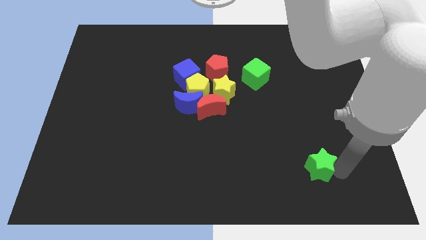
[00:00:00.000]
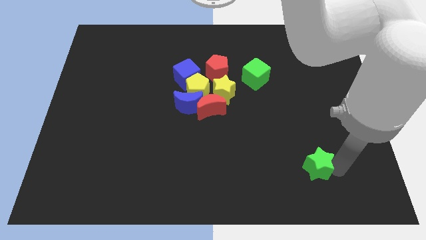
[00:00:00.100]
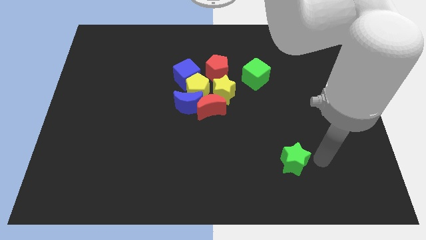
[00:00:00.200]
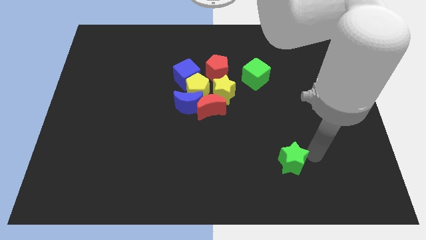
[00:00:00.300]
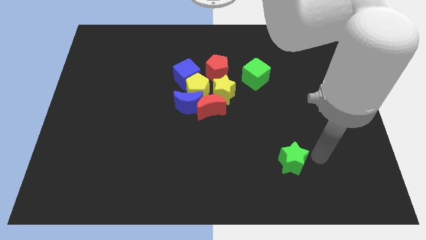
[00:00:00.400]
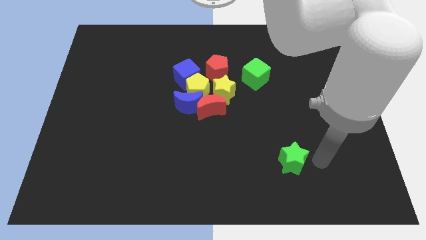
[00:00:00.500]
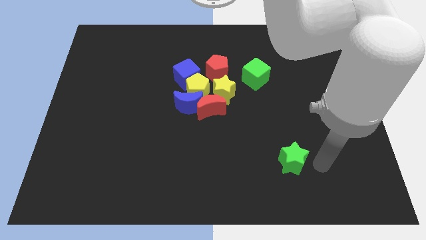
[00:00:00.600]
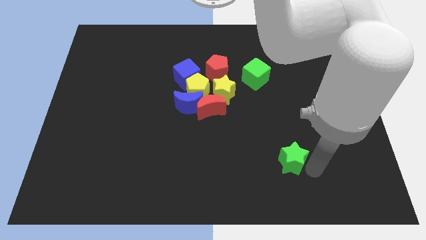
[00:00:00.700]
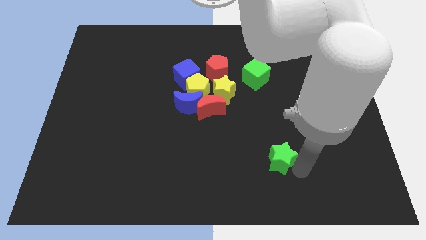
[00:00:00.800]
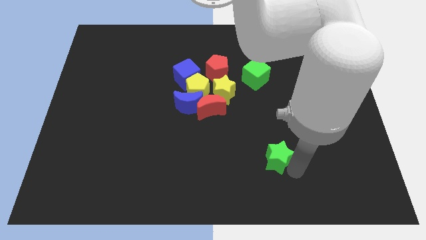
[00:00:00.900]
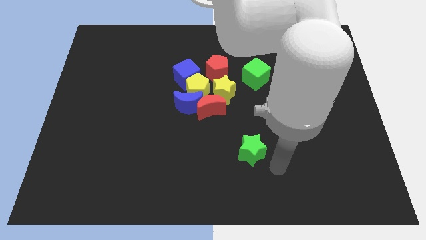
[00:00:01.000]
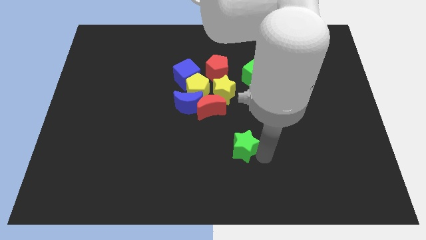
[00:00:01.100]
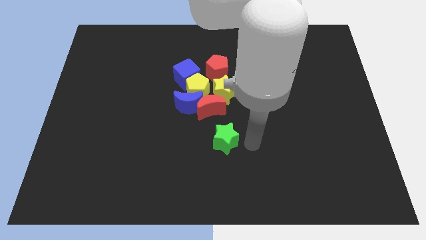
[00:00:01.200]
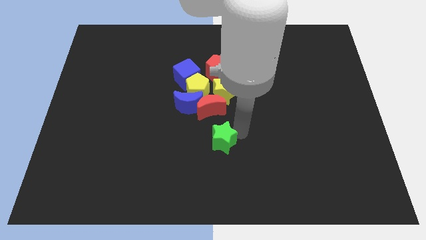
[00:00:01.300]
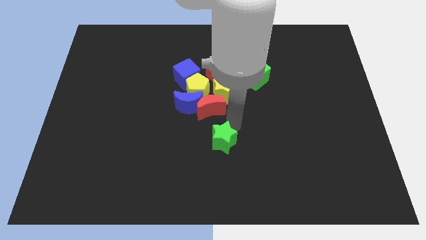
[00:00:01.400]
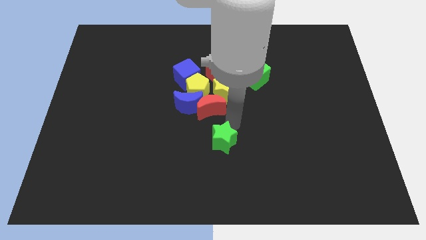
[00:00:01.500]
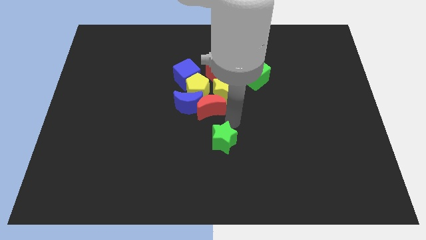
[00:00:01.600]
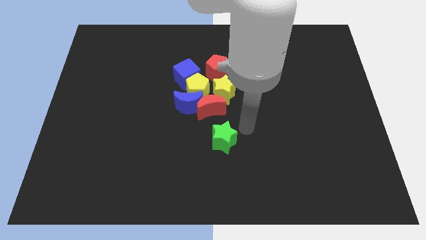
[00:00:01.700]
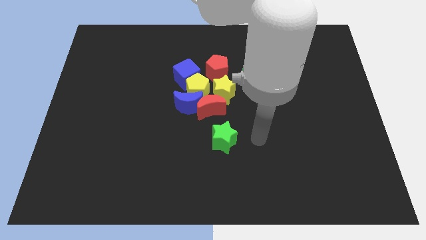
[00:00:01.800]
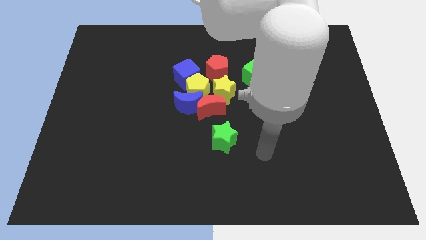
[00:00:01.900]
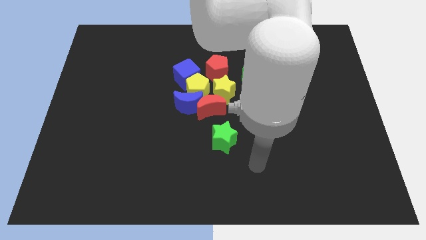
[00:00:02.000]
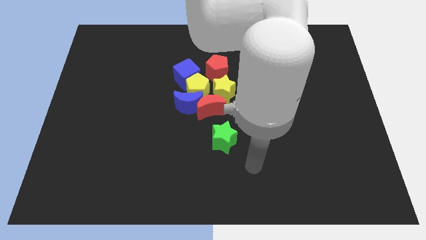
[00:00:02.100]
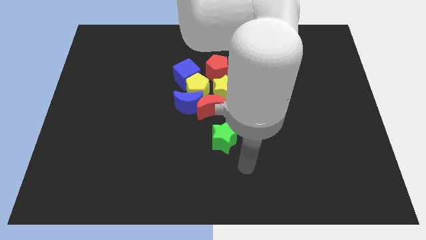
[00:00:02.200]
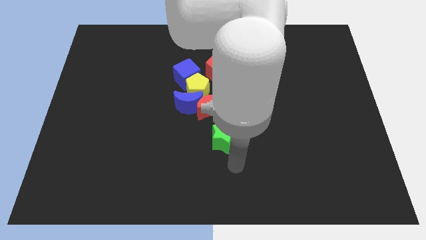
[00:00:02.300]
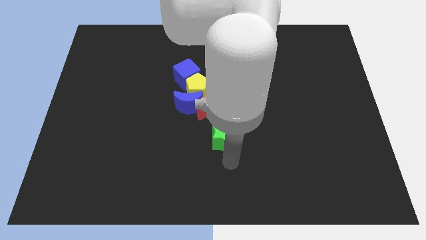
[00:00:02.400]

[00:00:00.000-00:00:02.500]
push the green star towards the red crescent

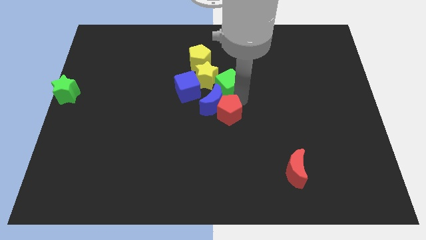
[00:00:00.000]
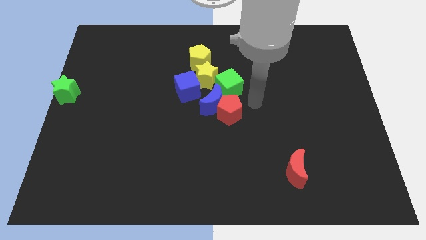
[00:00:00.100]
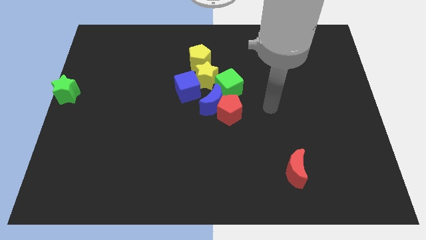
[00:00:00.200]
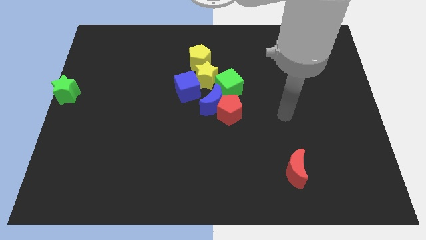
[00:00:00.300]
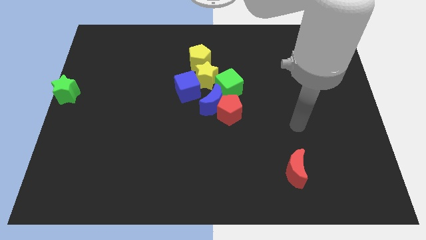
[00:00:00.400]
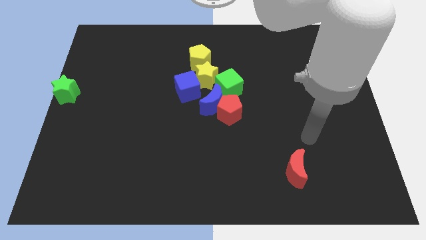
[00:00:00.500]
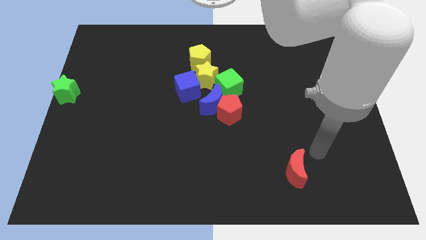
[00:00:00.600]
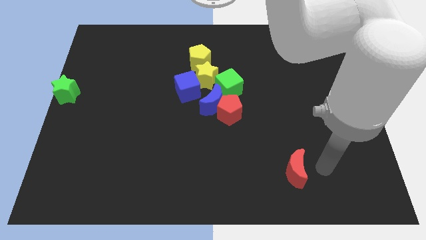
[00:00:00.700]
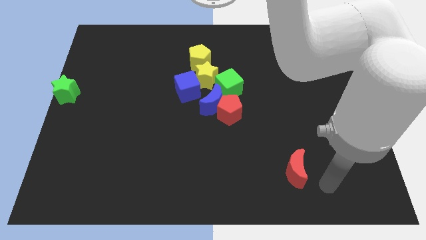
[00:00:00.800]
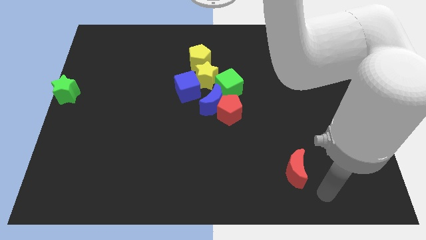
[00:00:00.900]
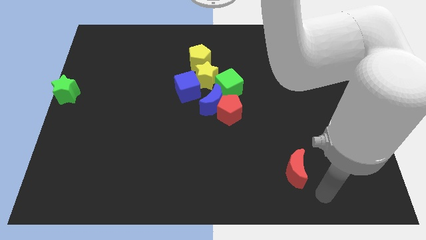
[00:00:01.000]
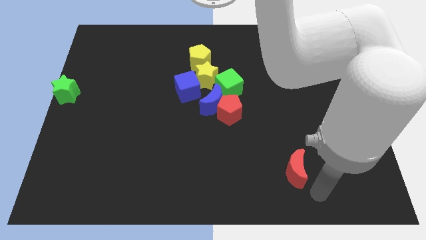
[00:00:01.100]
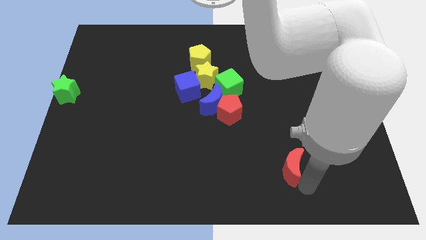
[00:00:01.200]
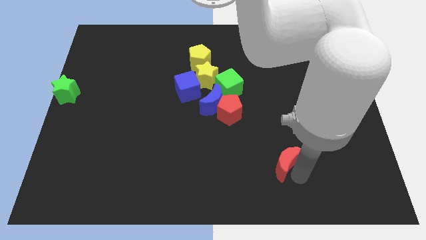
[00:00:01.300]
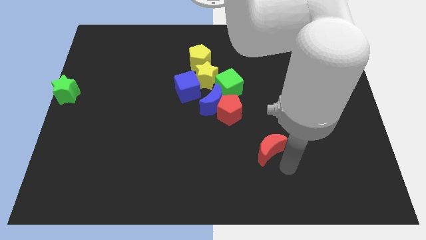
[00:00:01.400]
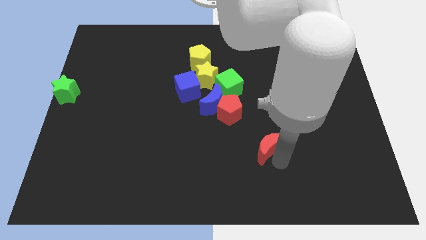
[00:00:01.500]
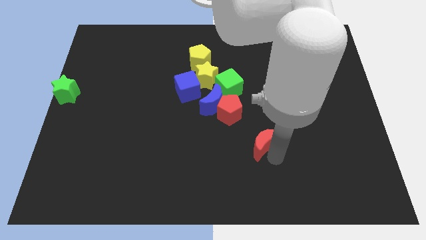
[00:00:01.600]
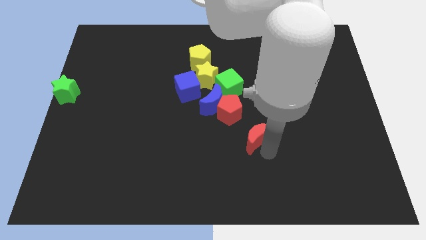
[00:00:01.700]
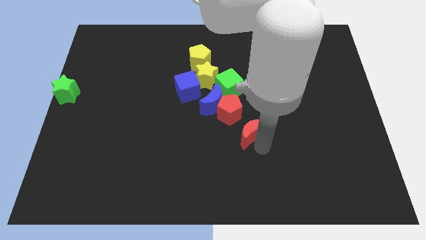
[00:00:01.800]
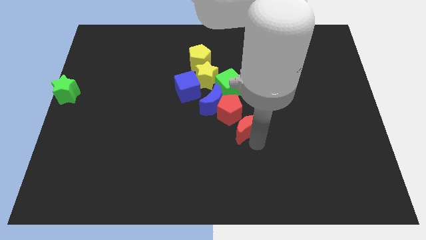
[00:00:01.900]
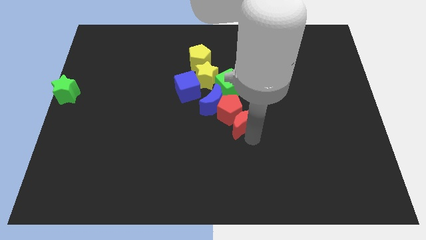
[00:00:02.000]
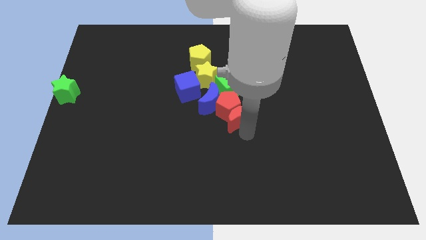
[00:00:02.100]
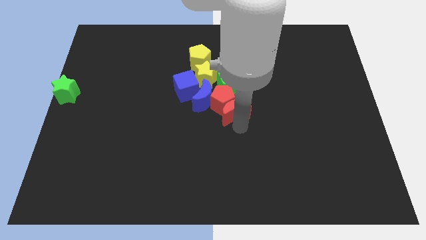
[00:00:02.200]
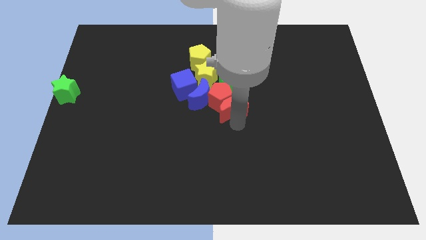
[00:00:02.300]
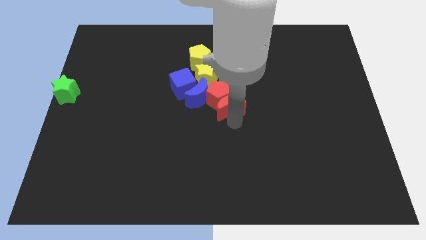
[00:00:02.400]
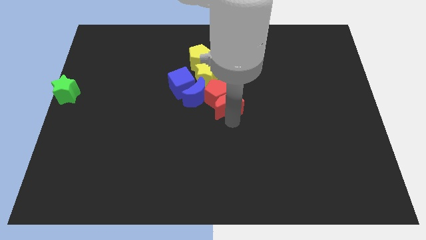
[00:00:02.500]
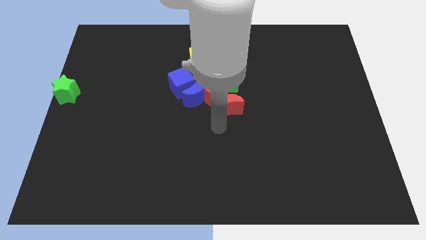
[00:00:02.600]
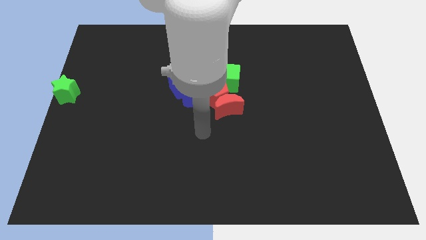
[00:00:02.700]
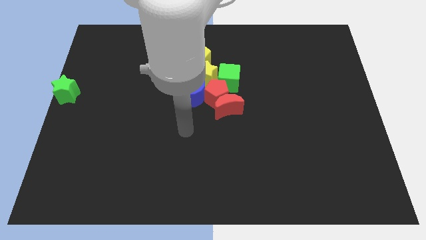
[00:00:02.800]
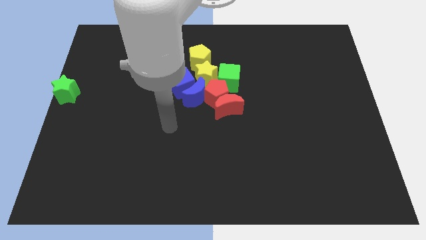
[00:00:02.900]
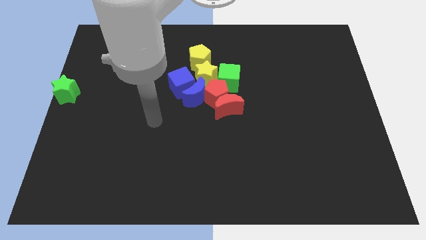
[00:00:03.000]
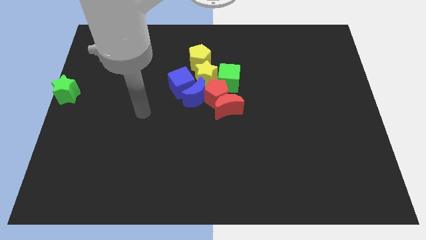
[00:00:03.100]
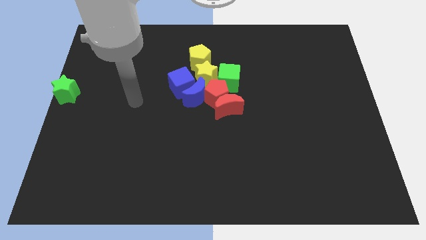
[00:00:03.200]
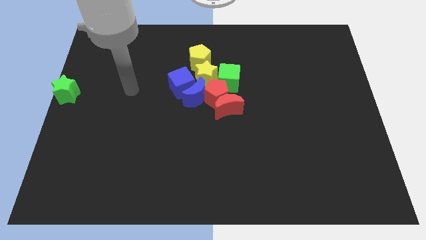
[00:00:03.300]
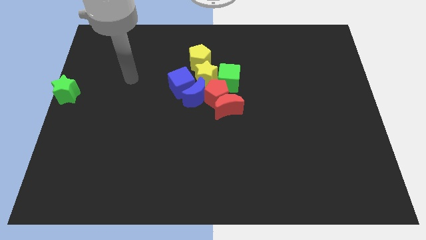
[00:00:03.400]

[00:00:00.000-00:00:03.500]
push the red crescent into the red pentagon

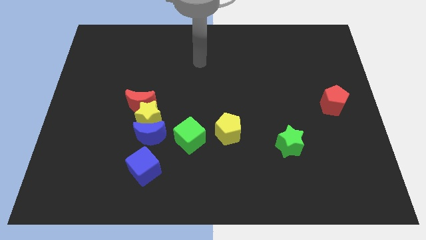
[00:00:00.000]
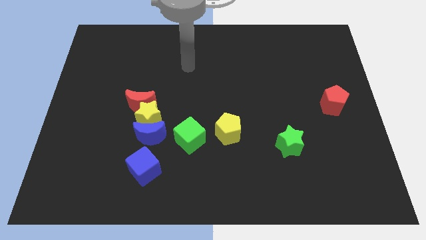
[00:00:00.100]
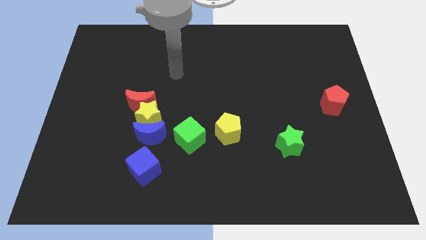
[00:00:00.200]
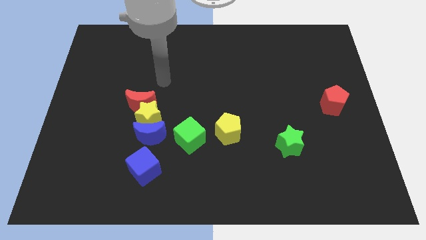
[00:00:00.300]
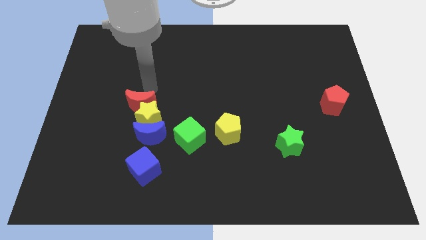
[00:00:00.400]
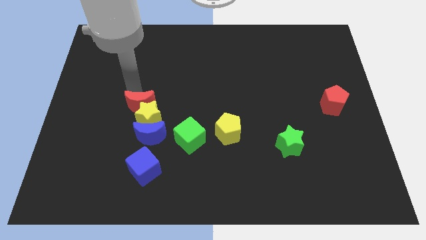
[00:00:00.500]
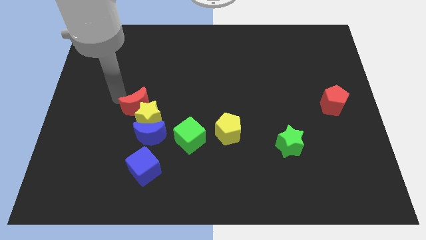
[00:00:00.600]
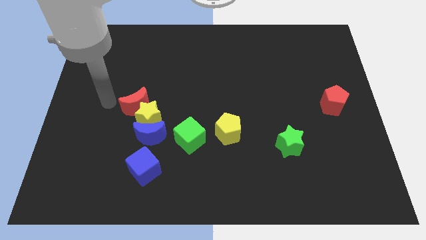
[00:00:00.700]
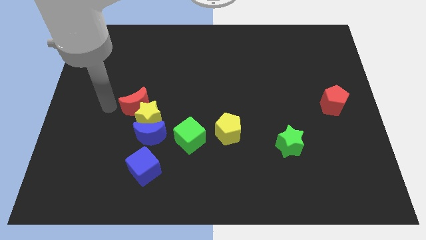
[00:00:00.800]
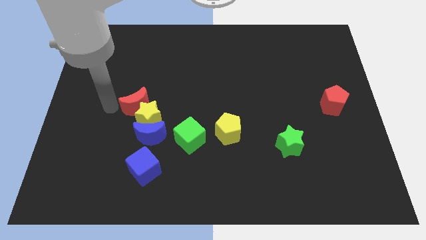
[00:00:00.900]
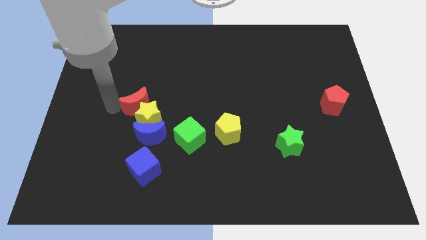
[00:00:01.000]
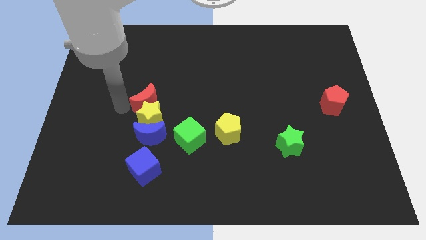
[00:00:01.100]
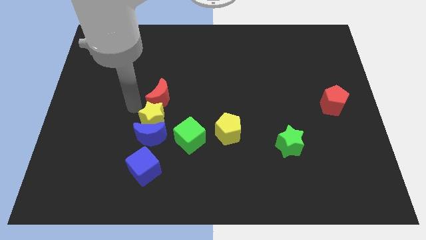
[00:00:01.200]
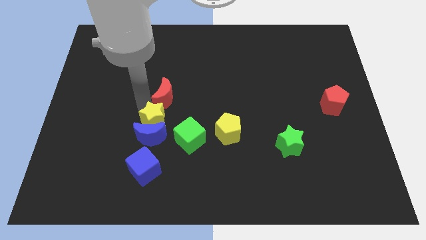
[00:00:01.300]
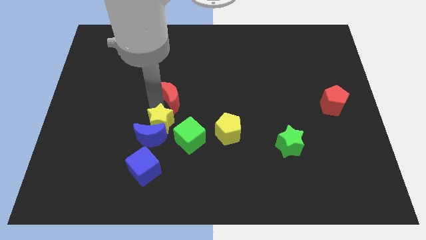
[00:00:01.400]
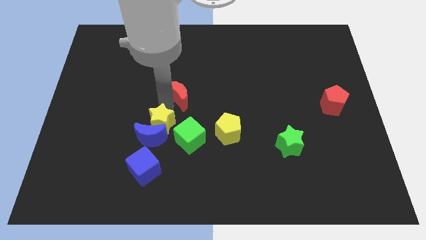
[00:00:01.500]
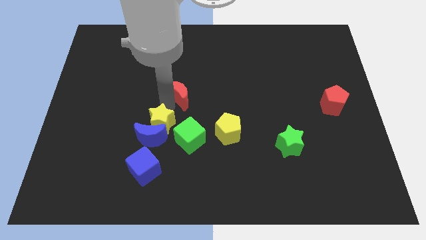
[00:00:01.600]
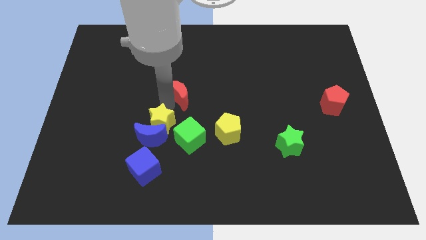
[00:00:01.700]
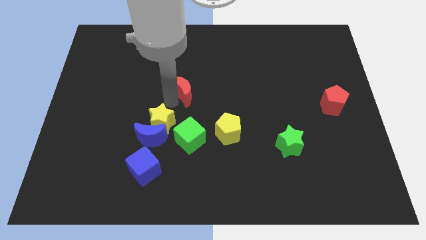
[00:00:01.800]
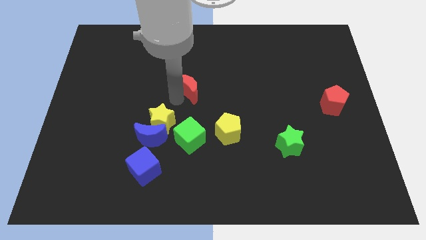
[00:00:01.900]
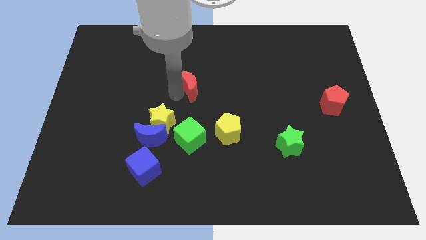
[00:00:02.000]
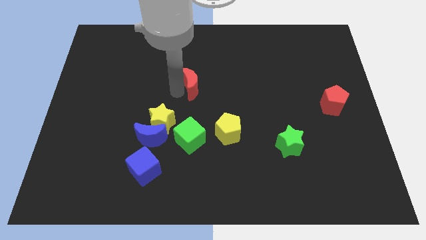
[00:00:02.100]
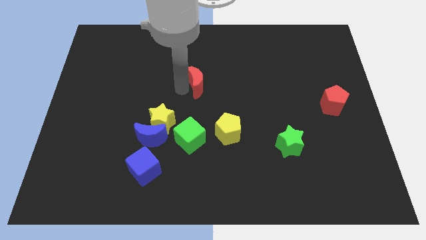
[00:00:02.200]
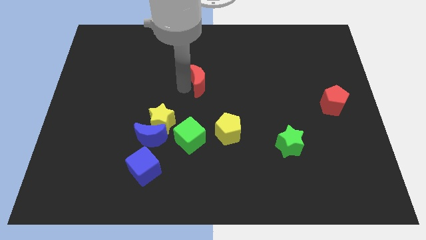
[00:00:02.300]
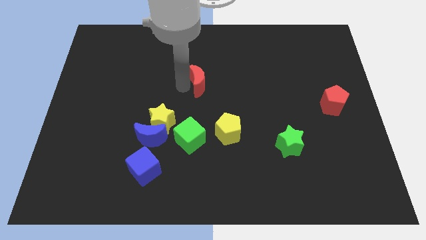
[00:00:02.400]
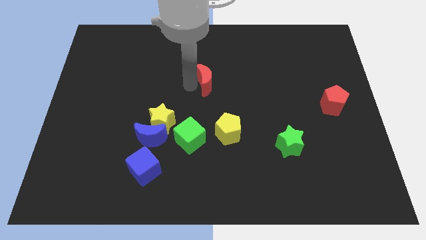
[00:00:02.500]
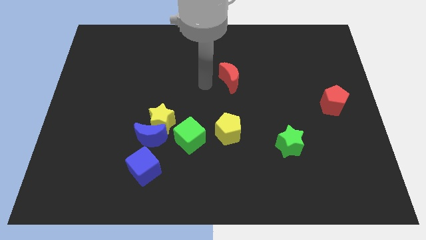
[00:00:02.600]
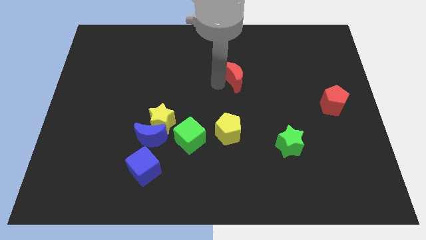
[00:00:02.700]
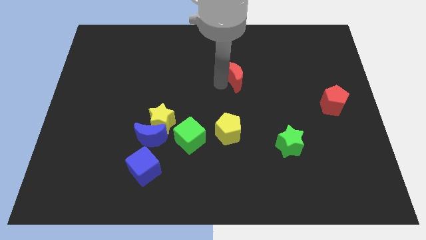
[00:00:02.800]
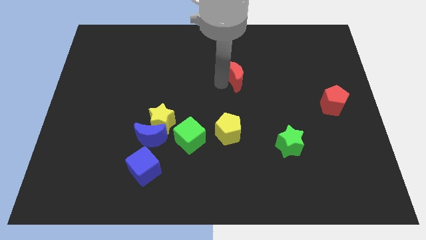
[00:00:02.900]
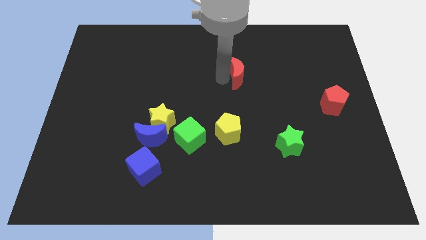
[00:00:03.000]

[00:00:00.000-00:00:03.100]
move the red crescent on the top of the yellow pentagon
